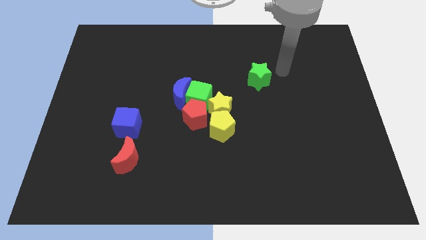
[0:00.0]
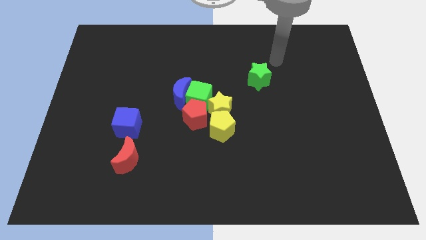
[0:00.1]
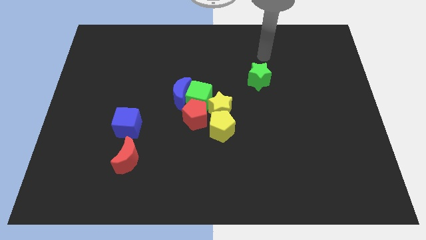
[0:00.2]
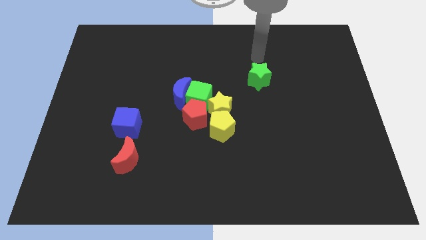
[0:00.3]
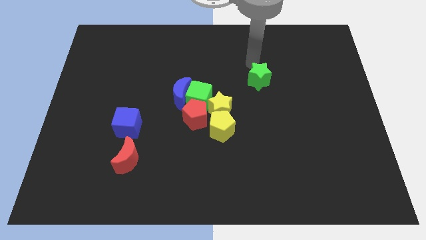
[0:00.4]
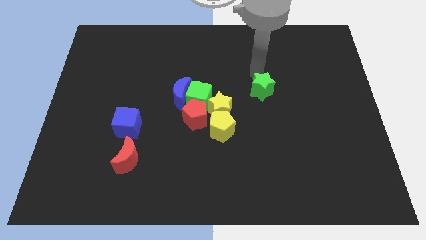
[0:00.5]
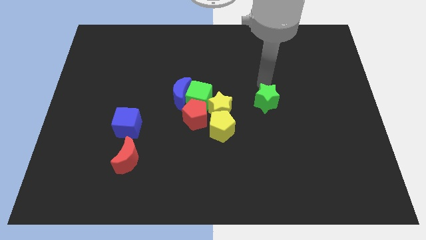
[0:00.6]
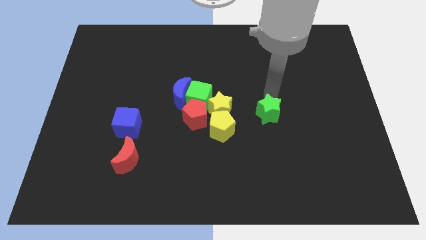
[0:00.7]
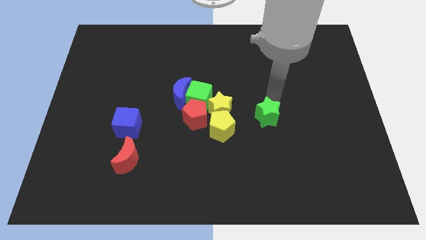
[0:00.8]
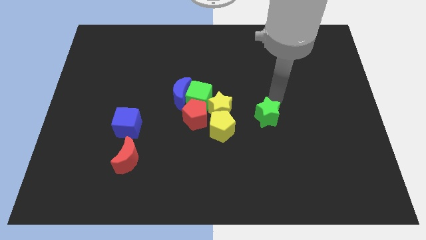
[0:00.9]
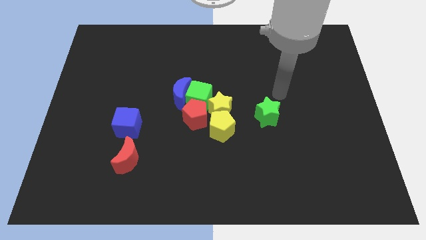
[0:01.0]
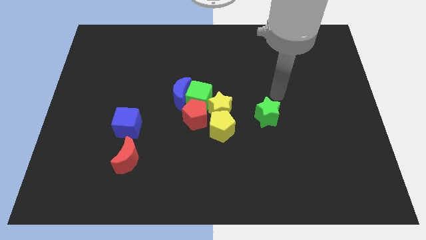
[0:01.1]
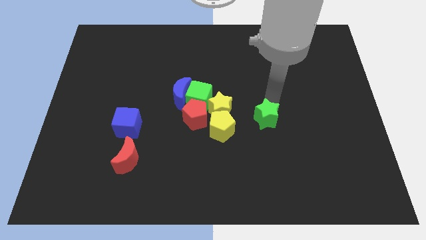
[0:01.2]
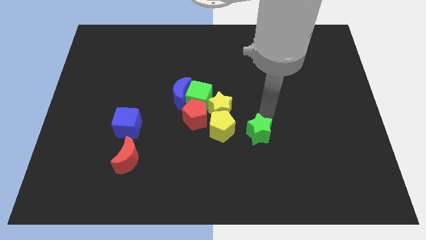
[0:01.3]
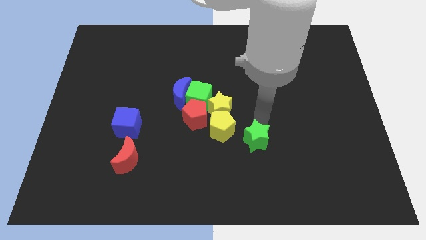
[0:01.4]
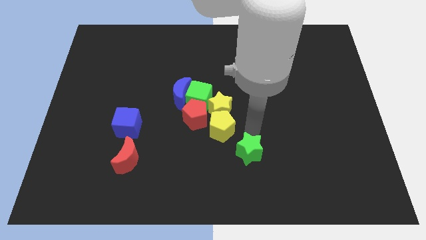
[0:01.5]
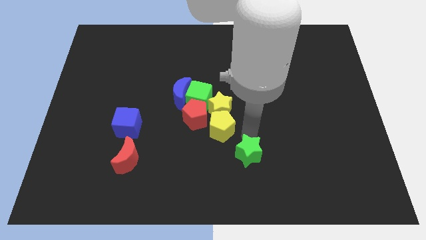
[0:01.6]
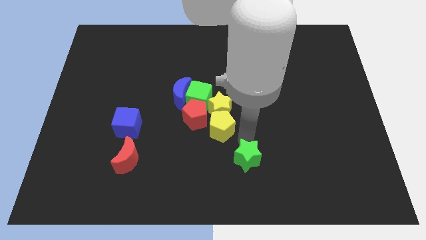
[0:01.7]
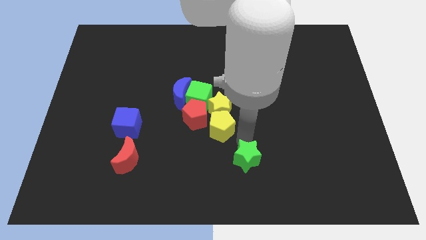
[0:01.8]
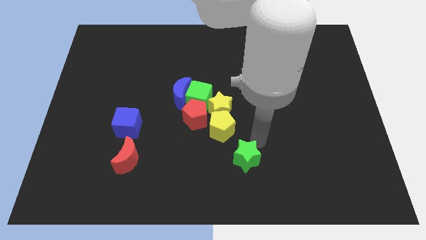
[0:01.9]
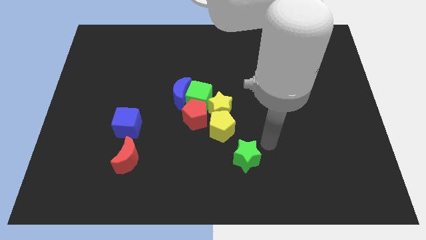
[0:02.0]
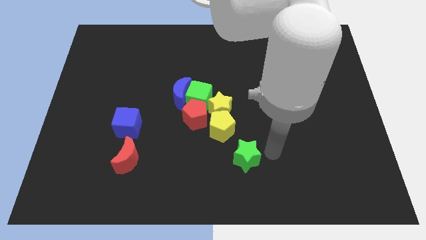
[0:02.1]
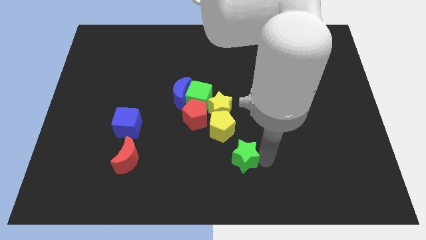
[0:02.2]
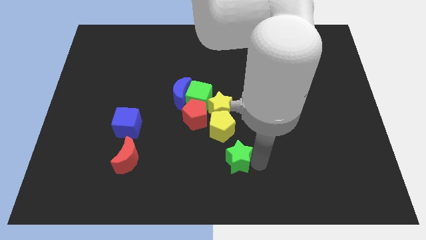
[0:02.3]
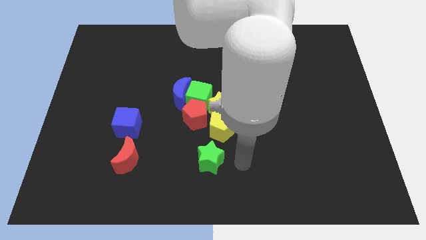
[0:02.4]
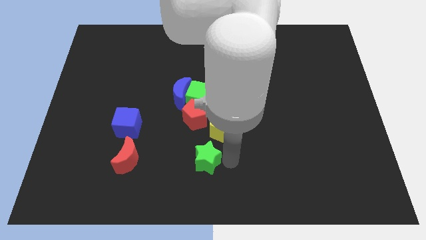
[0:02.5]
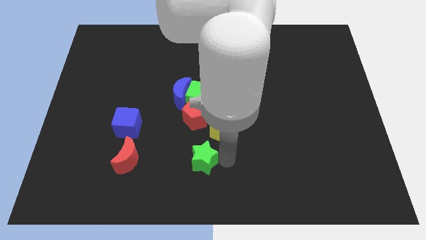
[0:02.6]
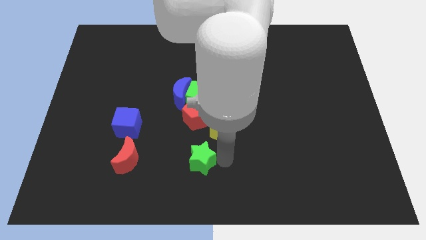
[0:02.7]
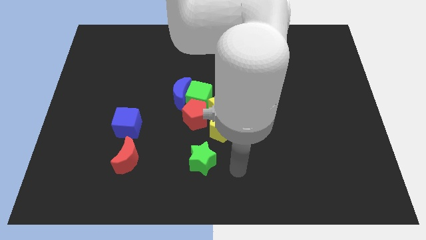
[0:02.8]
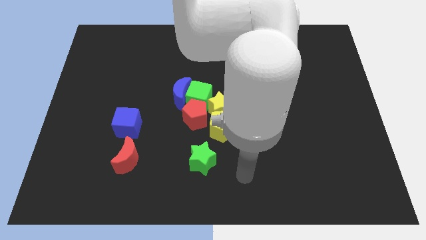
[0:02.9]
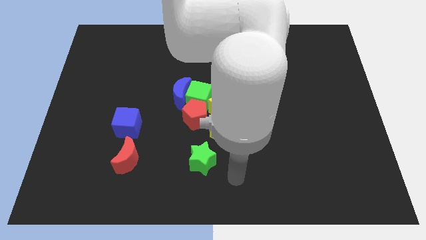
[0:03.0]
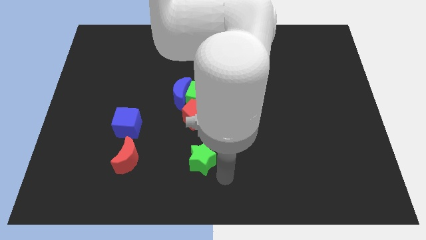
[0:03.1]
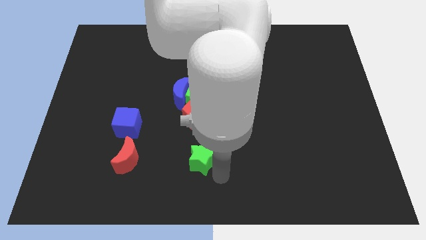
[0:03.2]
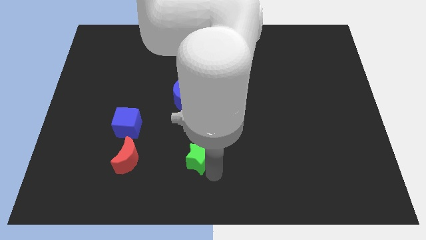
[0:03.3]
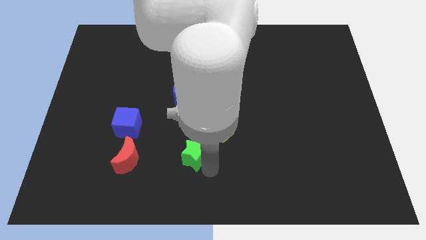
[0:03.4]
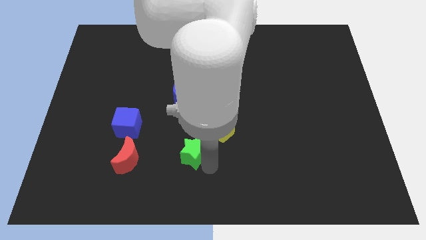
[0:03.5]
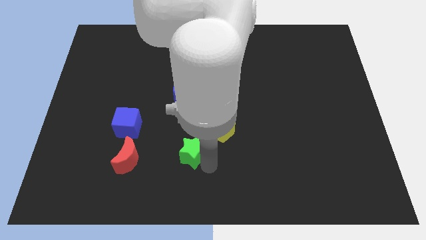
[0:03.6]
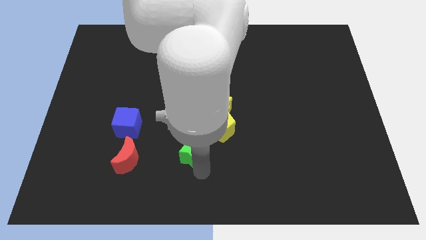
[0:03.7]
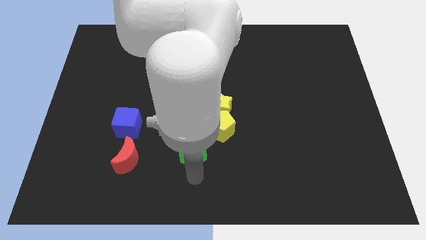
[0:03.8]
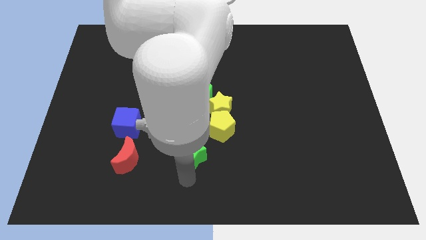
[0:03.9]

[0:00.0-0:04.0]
drag the green star towards the bottom of the red pentagon

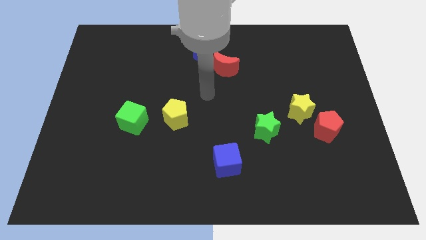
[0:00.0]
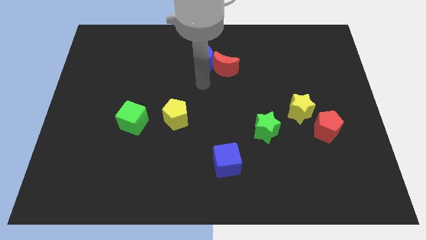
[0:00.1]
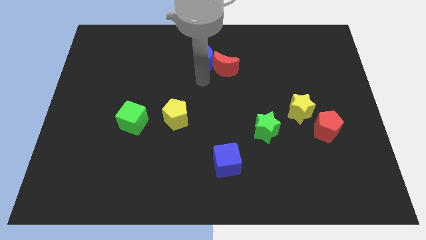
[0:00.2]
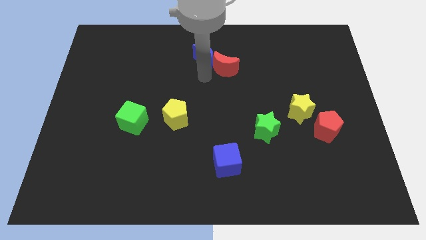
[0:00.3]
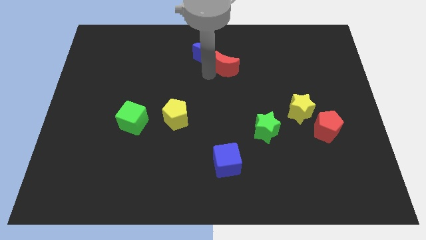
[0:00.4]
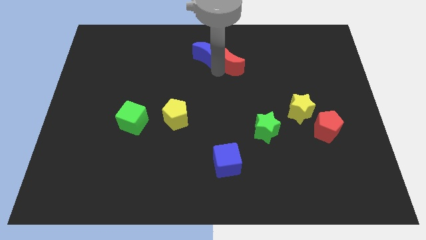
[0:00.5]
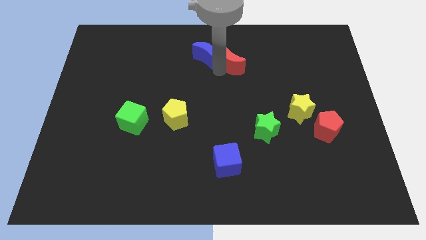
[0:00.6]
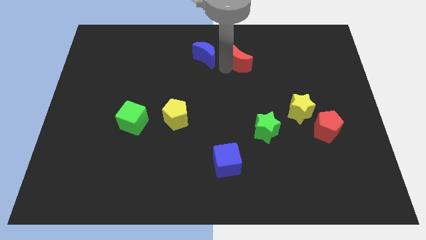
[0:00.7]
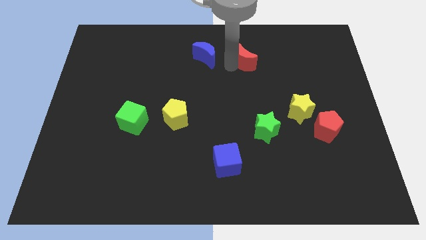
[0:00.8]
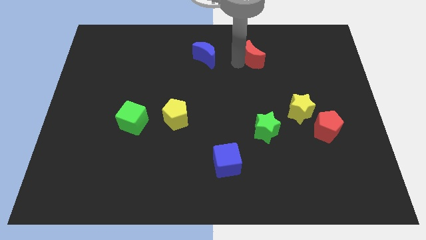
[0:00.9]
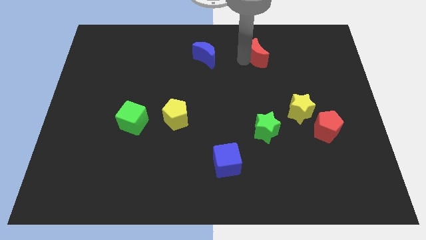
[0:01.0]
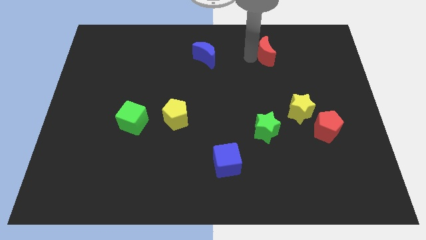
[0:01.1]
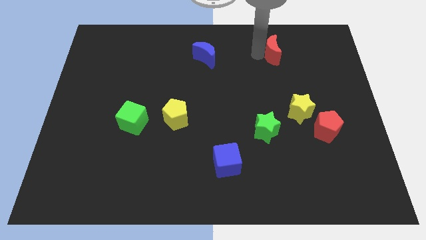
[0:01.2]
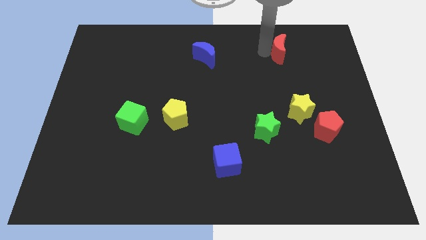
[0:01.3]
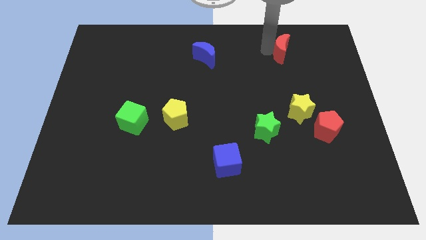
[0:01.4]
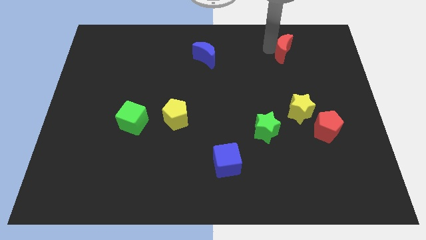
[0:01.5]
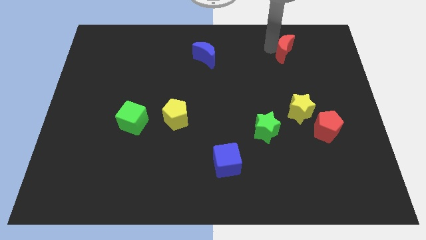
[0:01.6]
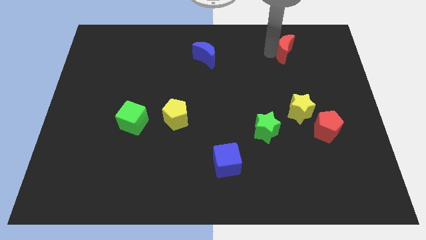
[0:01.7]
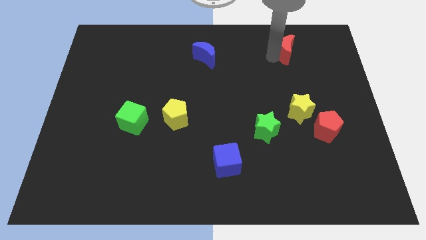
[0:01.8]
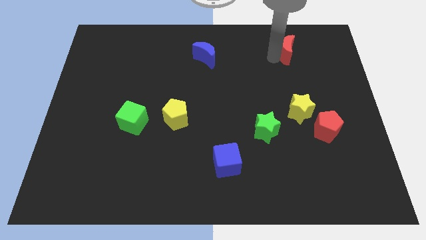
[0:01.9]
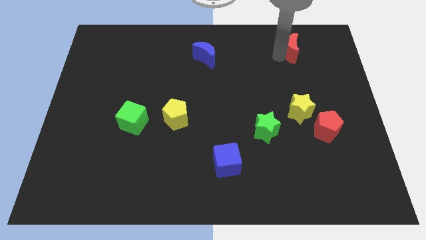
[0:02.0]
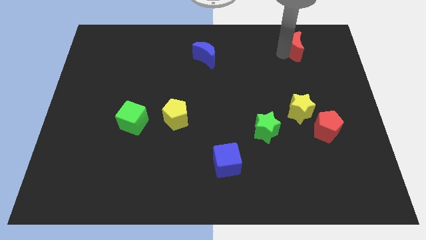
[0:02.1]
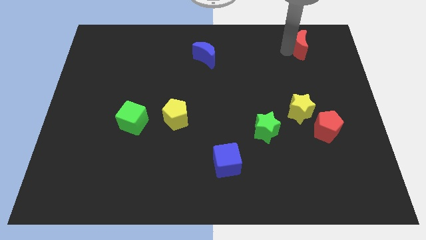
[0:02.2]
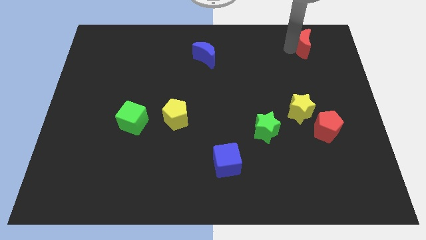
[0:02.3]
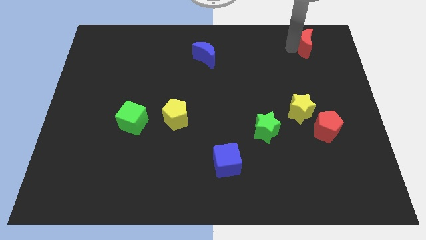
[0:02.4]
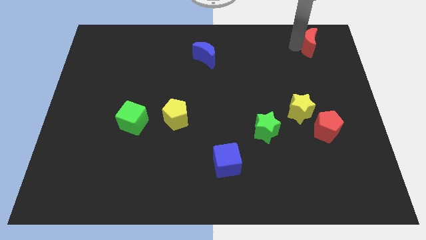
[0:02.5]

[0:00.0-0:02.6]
move red moon towards the top right

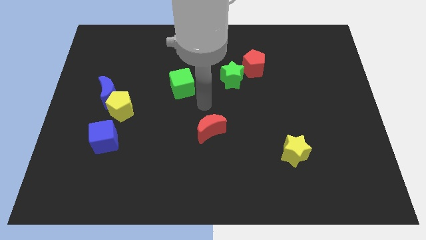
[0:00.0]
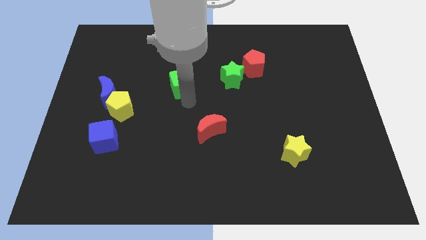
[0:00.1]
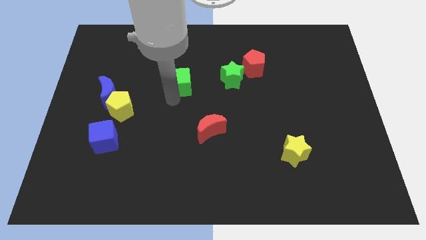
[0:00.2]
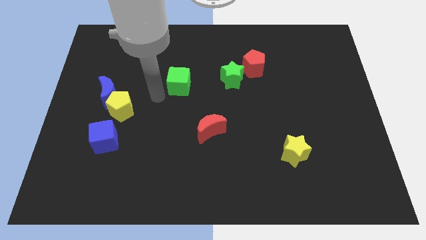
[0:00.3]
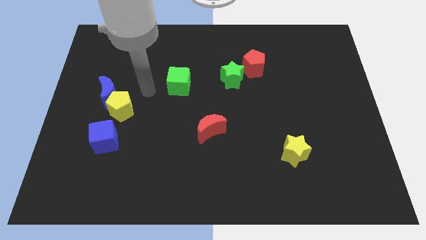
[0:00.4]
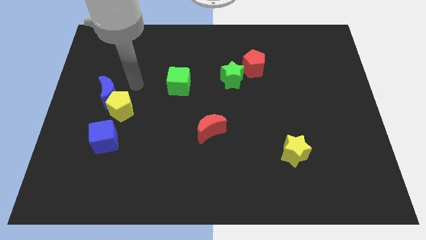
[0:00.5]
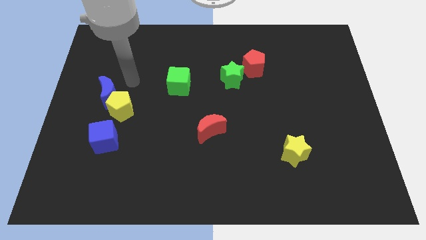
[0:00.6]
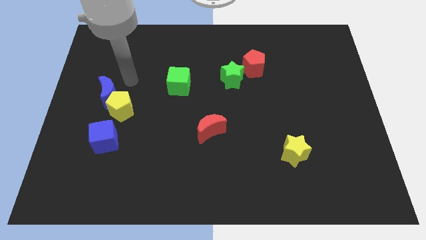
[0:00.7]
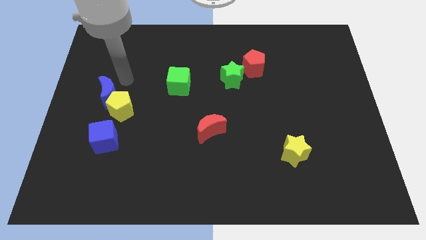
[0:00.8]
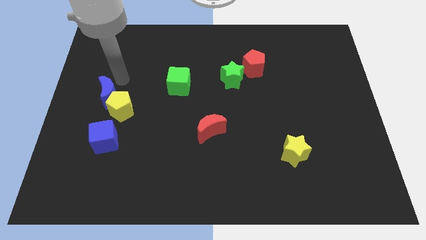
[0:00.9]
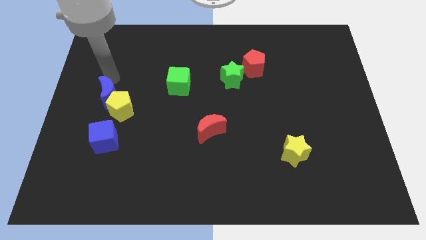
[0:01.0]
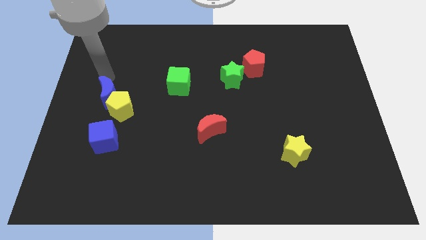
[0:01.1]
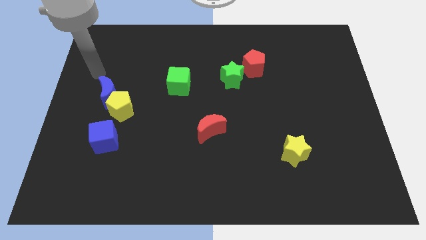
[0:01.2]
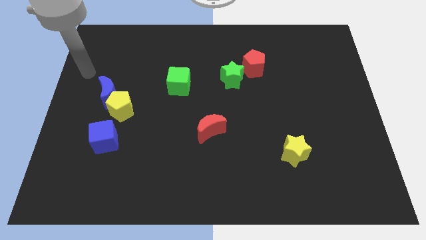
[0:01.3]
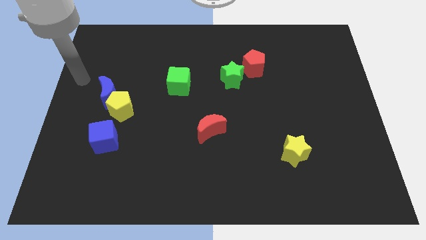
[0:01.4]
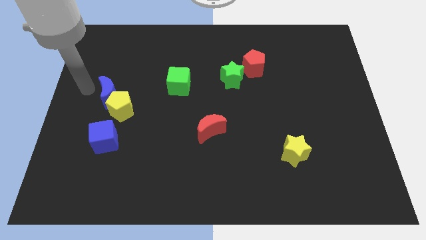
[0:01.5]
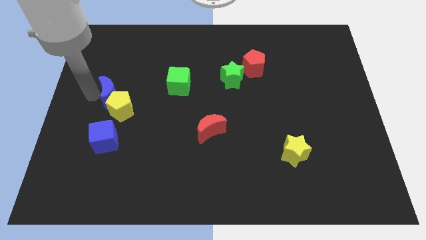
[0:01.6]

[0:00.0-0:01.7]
move the arm towards the left side of the blue crescent

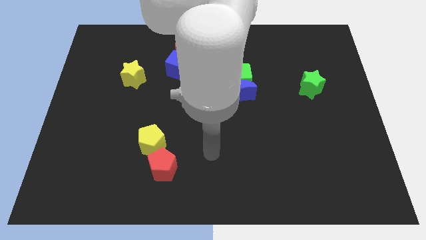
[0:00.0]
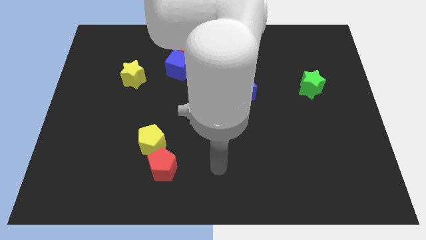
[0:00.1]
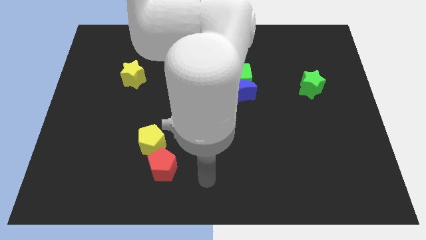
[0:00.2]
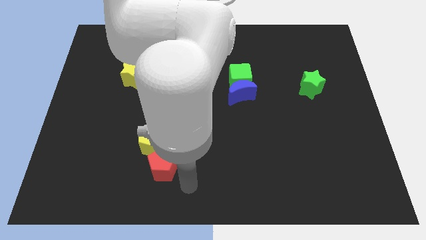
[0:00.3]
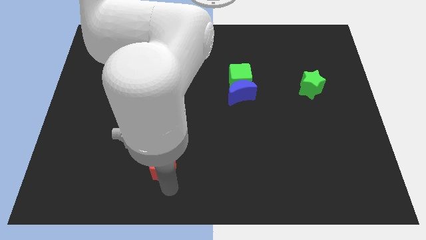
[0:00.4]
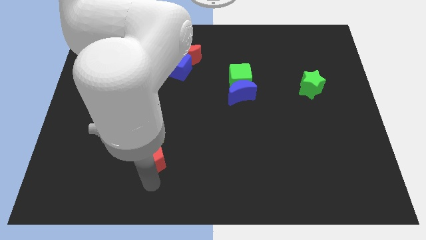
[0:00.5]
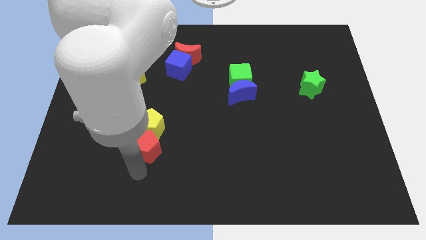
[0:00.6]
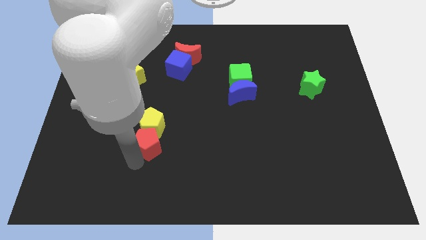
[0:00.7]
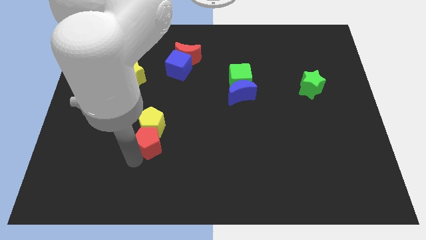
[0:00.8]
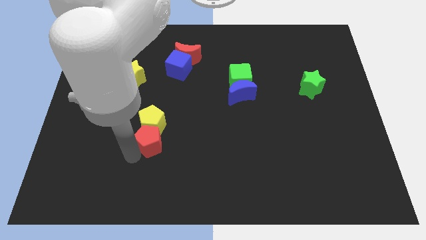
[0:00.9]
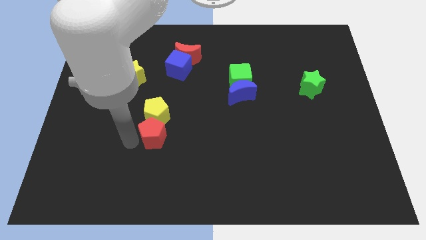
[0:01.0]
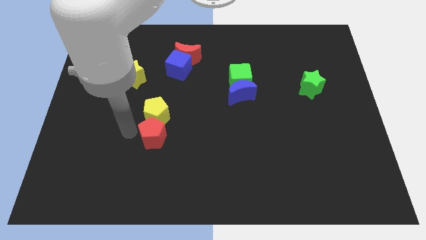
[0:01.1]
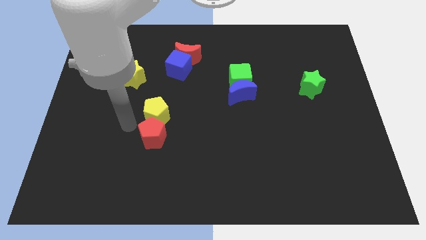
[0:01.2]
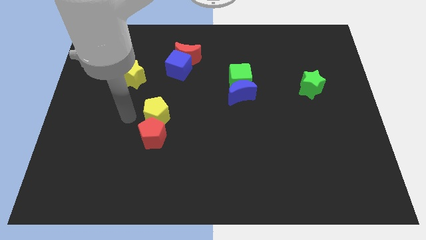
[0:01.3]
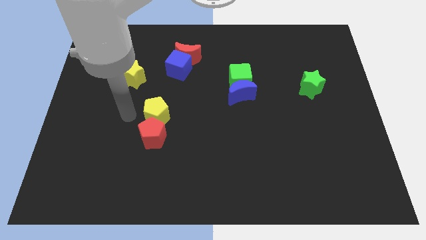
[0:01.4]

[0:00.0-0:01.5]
place the red pentagon below the yellow pentagon
